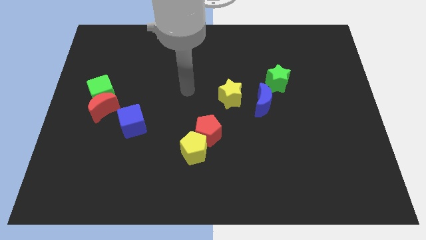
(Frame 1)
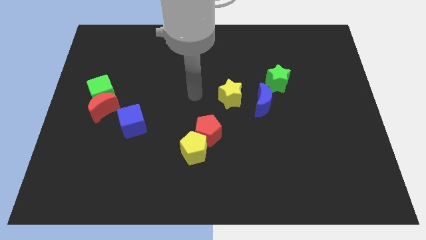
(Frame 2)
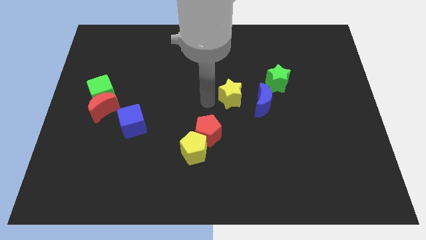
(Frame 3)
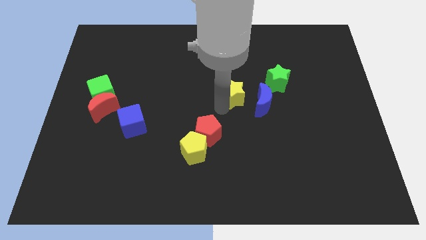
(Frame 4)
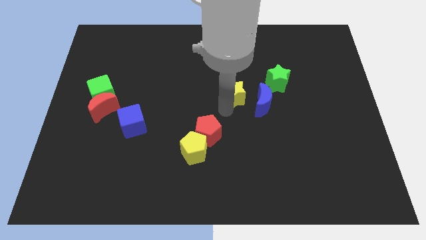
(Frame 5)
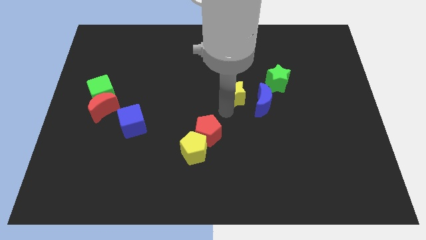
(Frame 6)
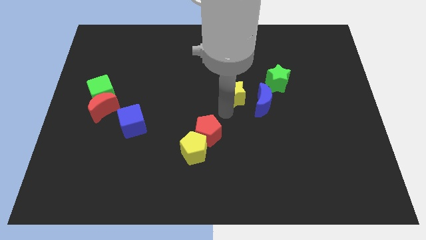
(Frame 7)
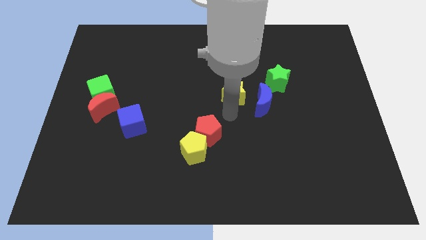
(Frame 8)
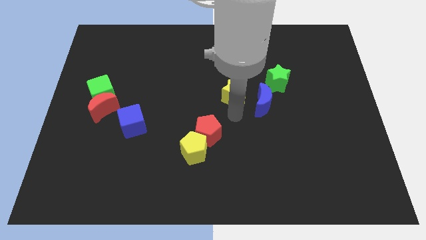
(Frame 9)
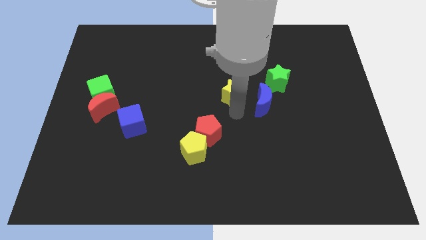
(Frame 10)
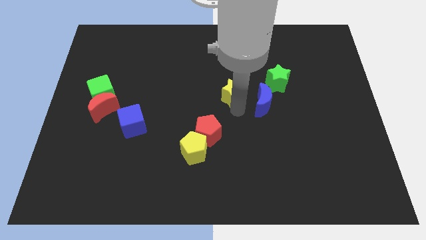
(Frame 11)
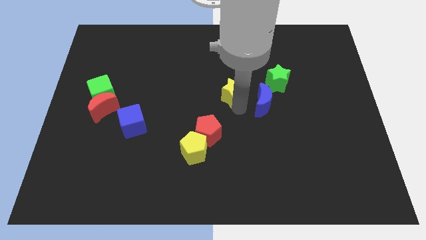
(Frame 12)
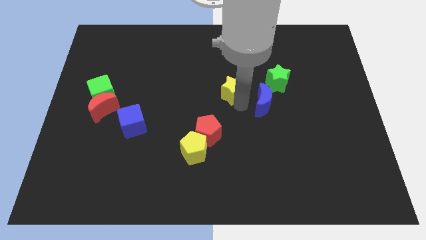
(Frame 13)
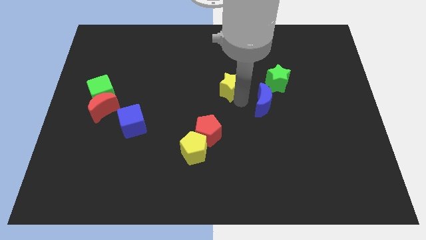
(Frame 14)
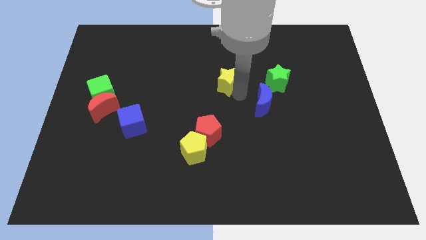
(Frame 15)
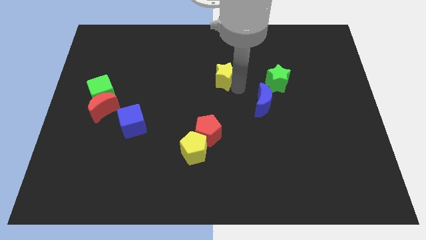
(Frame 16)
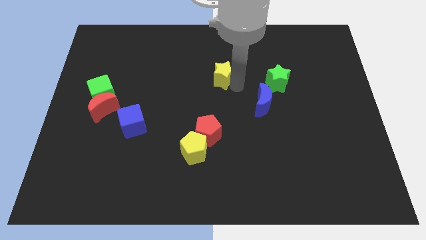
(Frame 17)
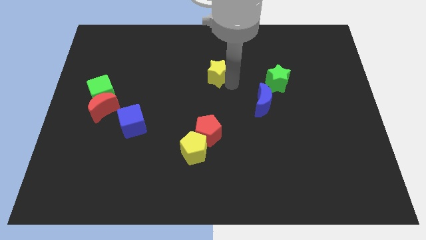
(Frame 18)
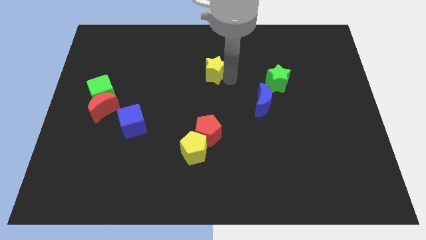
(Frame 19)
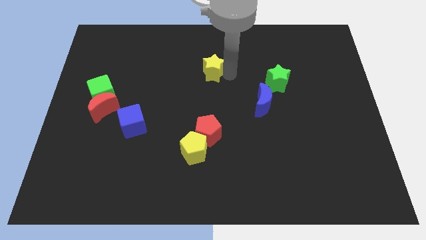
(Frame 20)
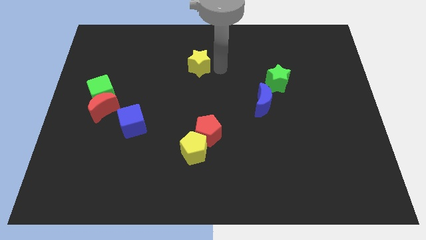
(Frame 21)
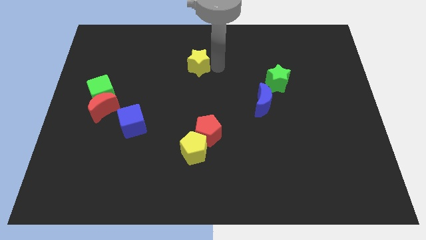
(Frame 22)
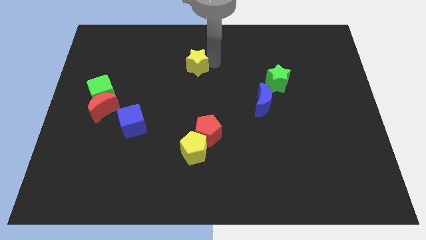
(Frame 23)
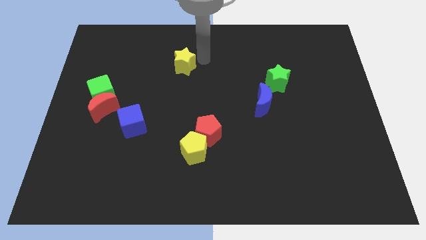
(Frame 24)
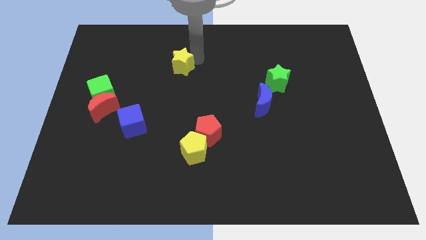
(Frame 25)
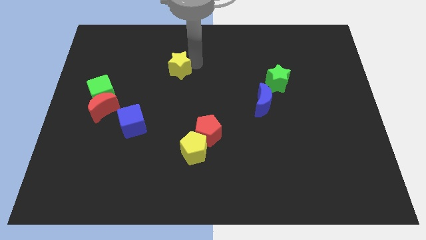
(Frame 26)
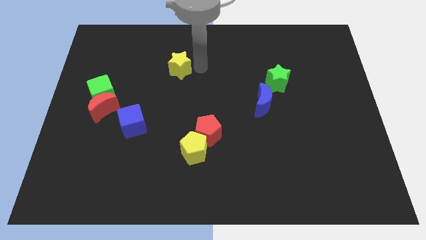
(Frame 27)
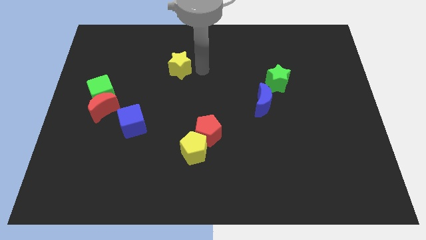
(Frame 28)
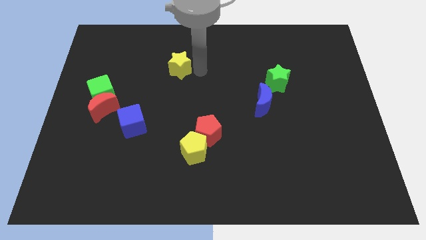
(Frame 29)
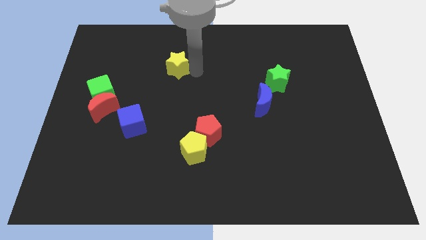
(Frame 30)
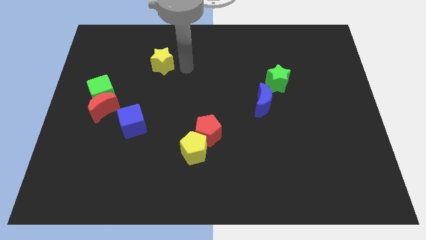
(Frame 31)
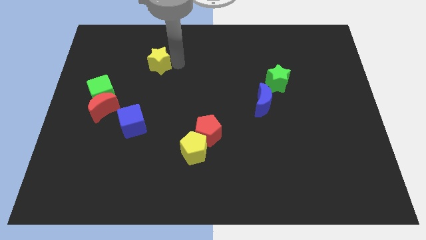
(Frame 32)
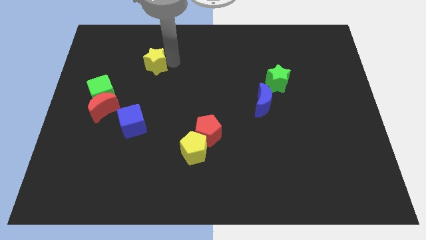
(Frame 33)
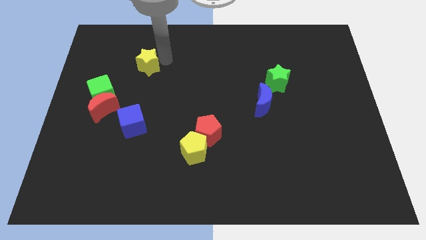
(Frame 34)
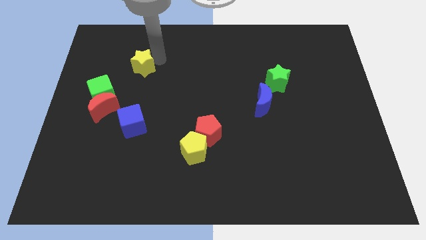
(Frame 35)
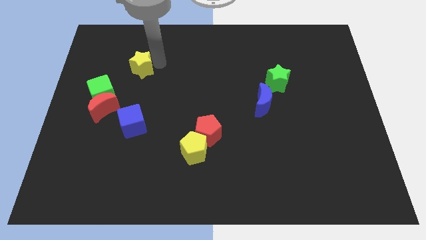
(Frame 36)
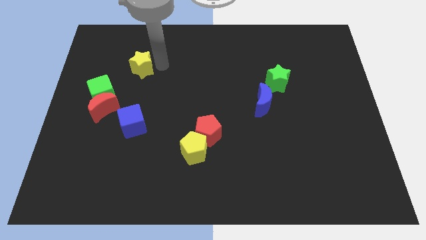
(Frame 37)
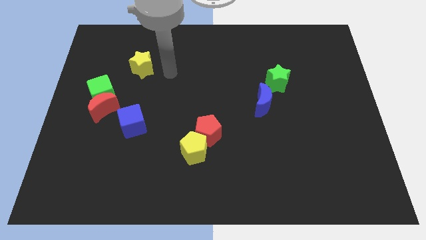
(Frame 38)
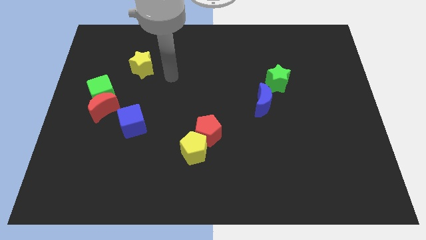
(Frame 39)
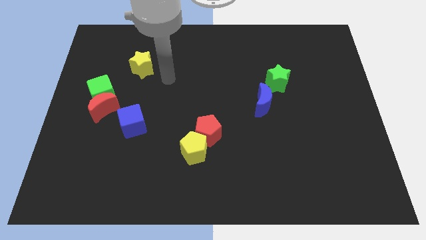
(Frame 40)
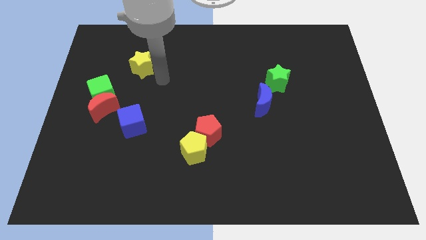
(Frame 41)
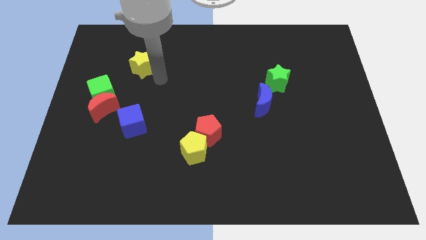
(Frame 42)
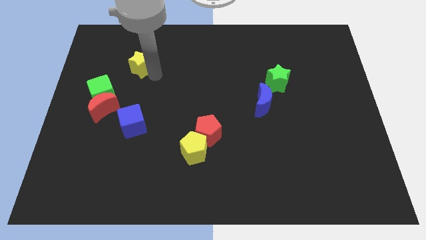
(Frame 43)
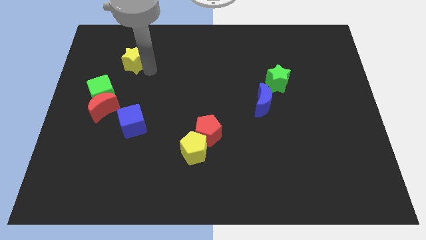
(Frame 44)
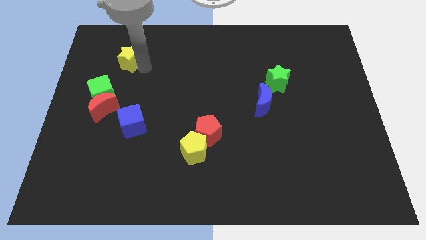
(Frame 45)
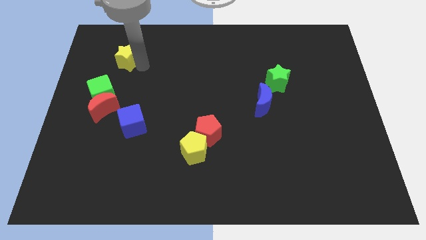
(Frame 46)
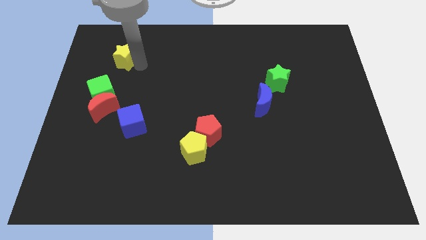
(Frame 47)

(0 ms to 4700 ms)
move the yellow star to the top right side of the green cube

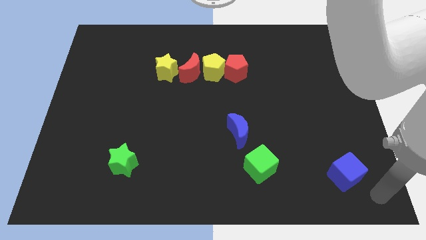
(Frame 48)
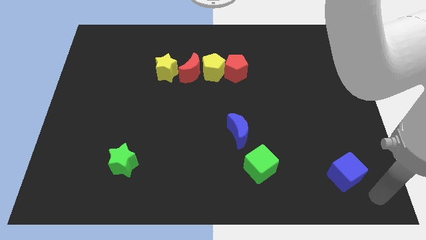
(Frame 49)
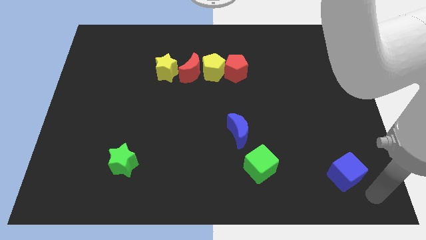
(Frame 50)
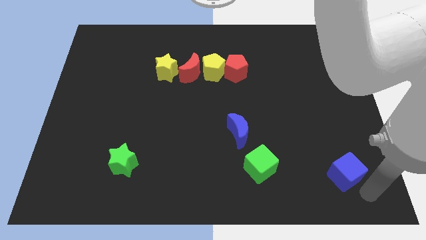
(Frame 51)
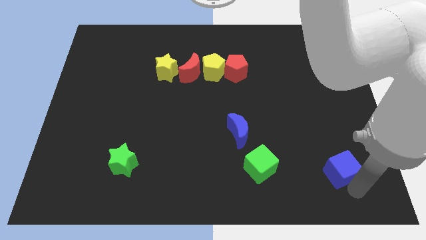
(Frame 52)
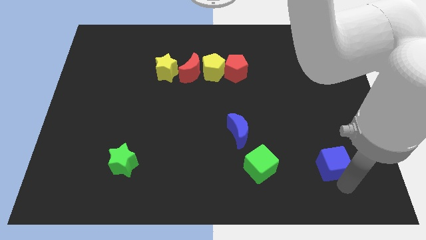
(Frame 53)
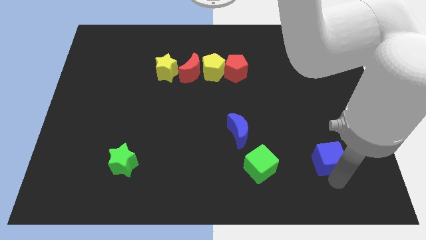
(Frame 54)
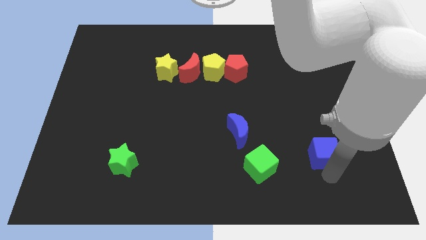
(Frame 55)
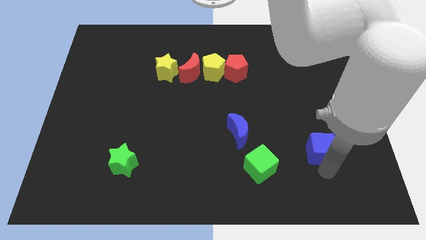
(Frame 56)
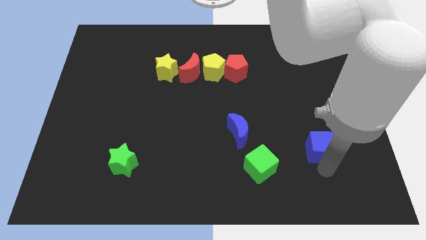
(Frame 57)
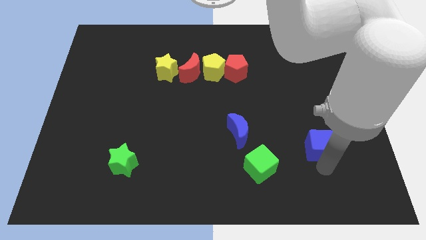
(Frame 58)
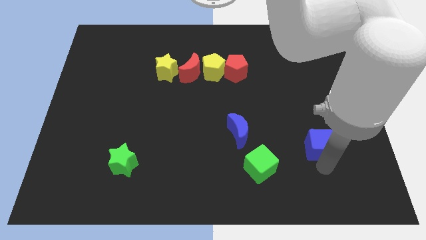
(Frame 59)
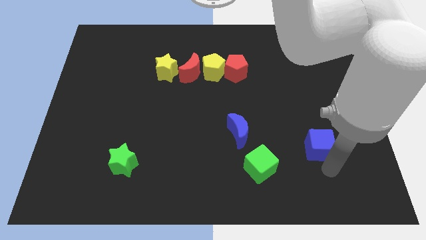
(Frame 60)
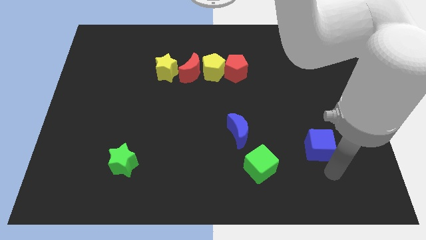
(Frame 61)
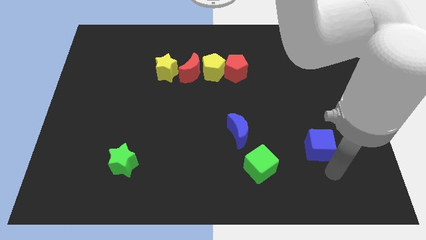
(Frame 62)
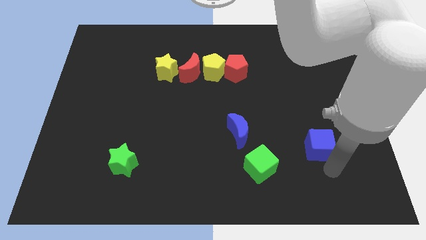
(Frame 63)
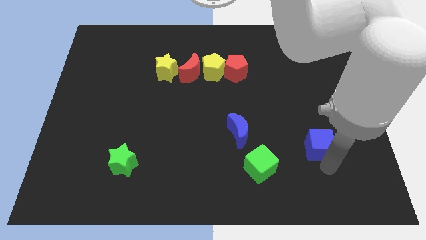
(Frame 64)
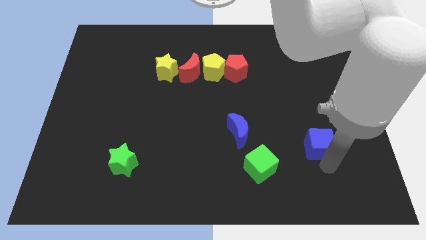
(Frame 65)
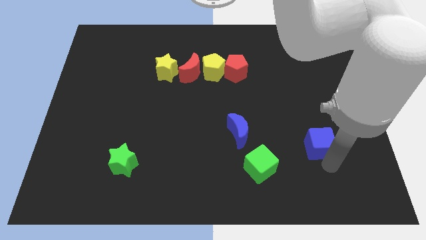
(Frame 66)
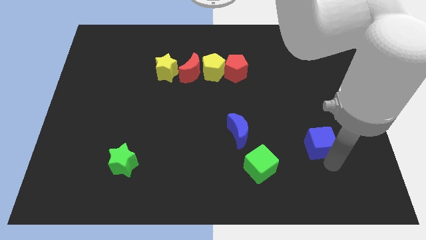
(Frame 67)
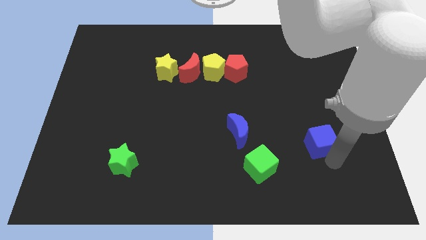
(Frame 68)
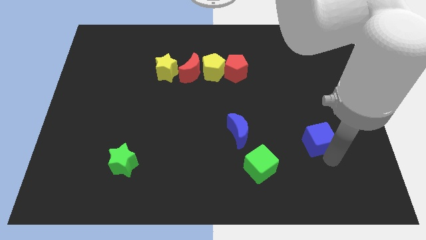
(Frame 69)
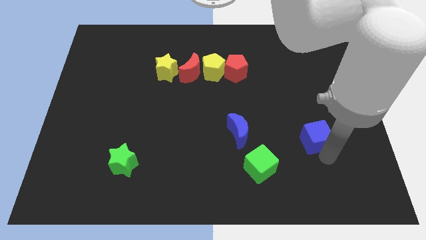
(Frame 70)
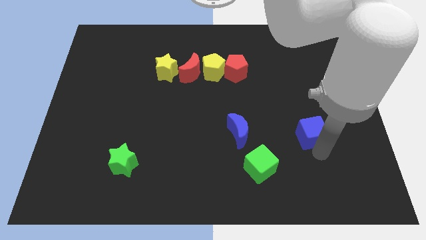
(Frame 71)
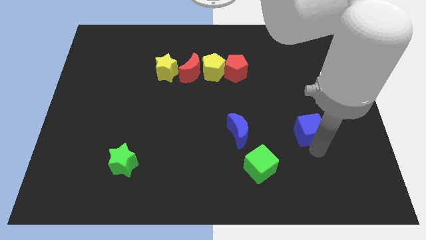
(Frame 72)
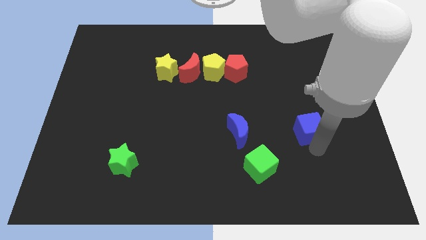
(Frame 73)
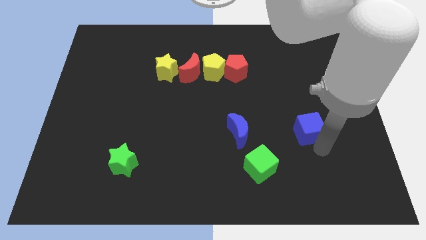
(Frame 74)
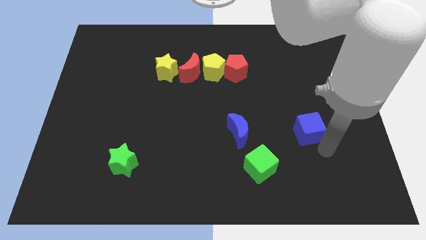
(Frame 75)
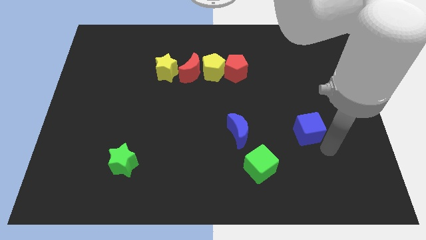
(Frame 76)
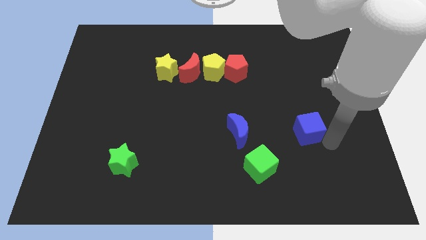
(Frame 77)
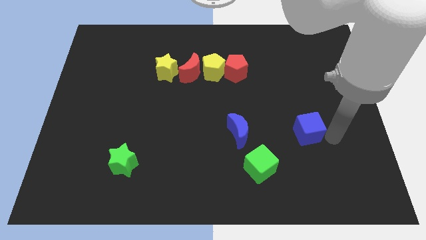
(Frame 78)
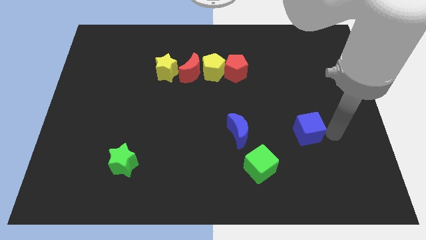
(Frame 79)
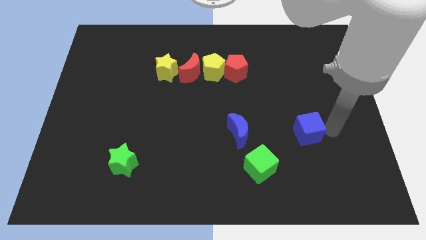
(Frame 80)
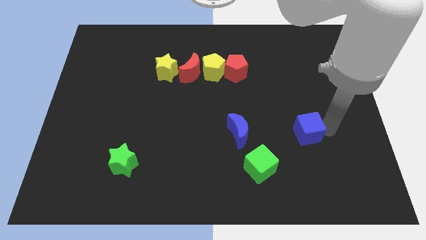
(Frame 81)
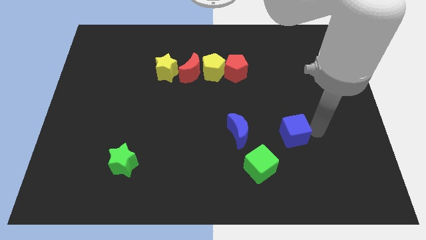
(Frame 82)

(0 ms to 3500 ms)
place the blue cube to the right of the blue moon

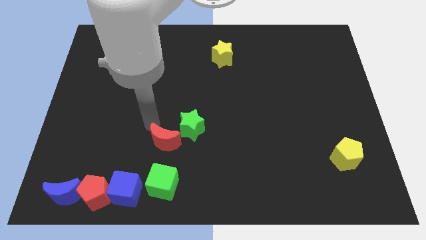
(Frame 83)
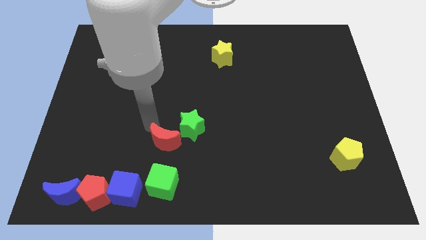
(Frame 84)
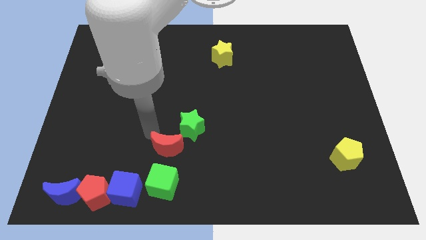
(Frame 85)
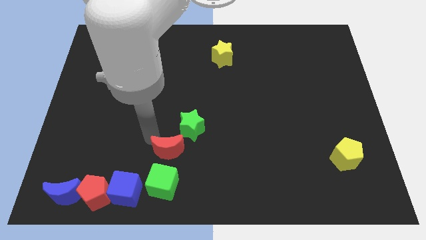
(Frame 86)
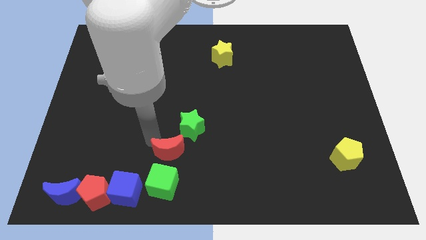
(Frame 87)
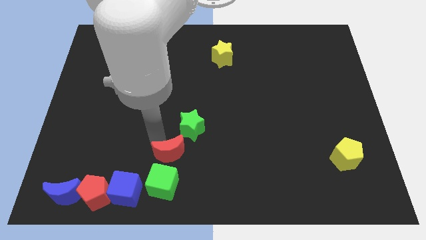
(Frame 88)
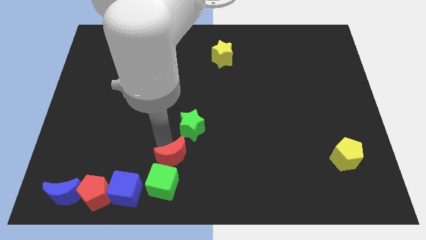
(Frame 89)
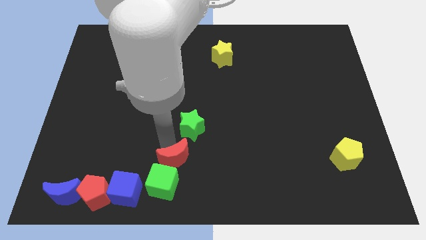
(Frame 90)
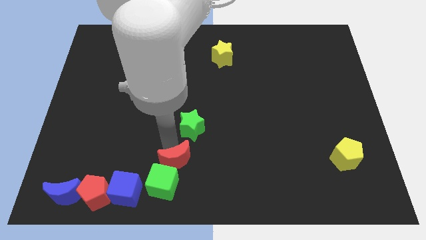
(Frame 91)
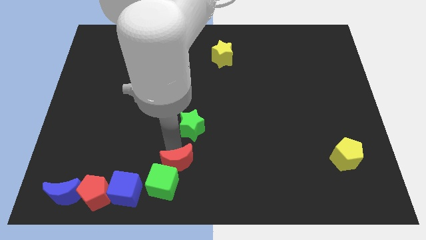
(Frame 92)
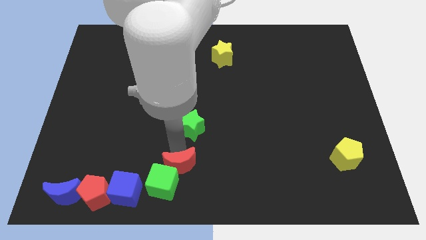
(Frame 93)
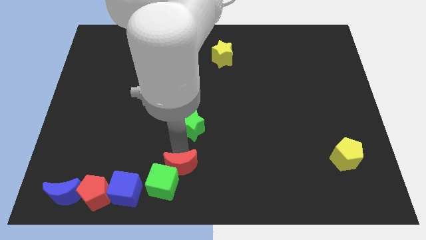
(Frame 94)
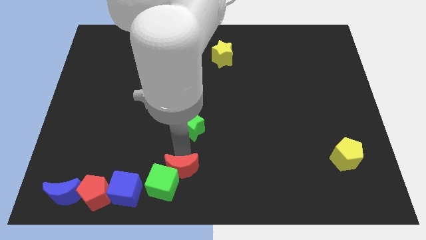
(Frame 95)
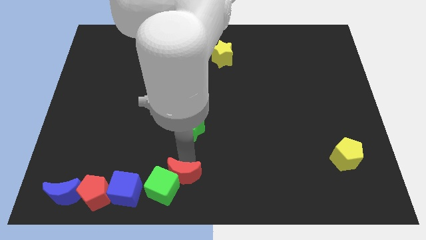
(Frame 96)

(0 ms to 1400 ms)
move the red crescent into the green cube
